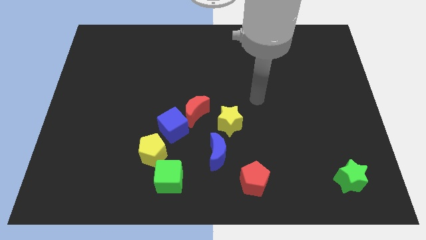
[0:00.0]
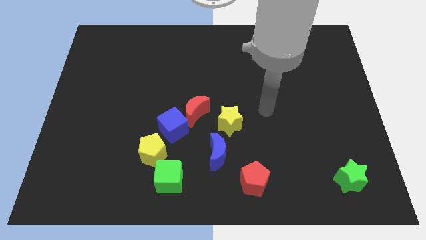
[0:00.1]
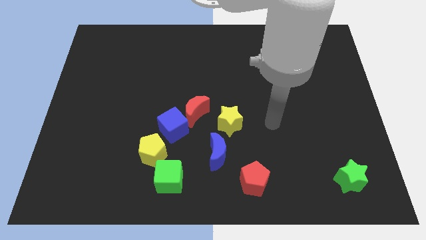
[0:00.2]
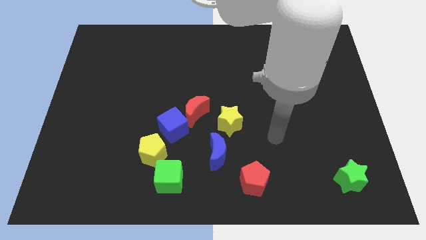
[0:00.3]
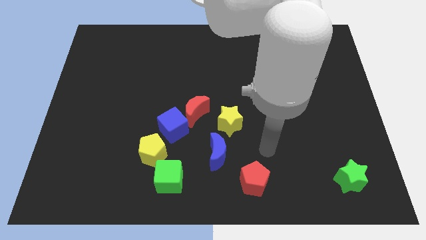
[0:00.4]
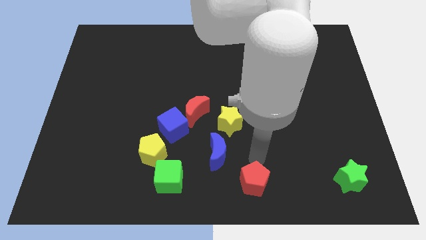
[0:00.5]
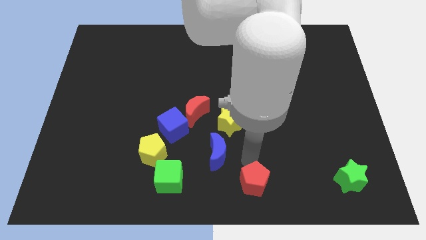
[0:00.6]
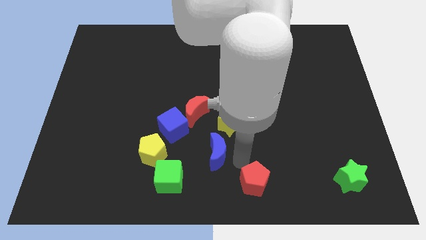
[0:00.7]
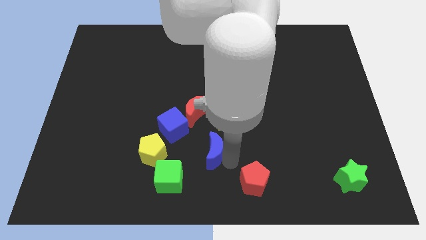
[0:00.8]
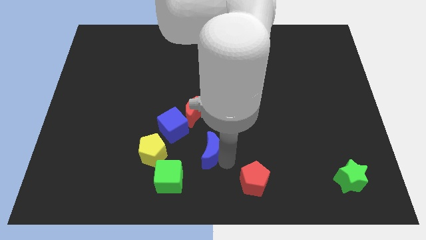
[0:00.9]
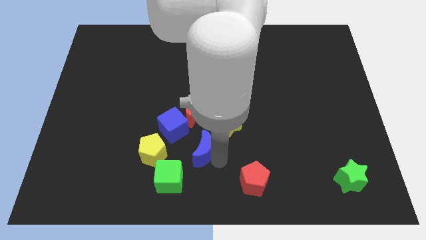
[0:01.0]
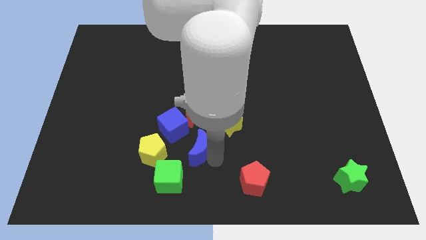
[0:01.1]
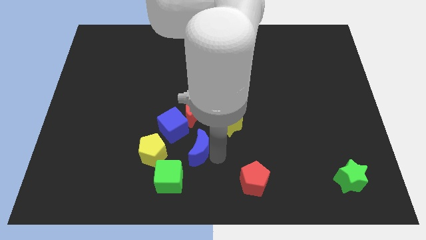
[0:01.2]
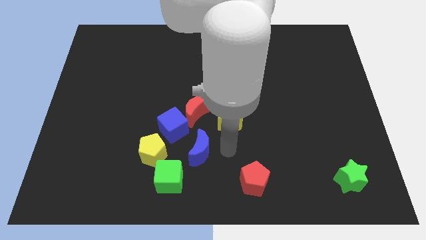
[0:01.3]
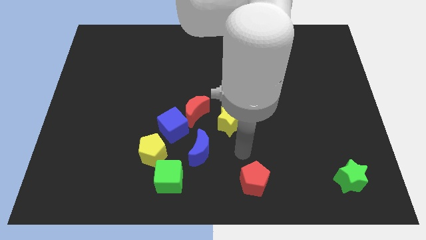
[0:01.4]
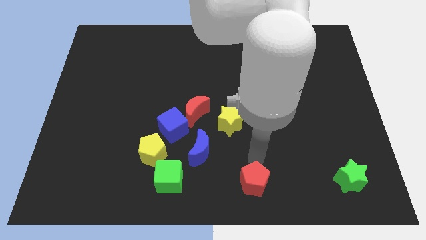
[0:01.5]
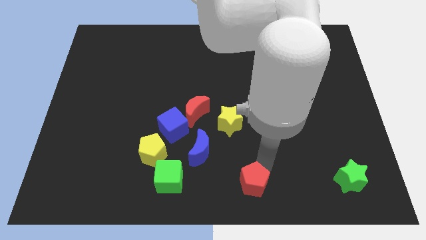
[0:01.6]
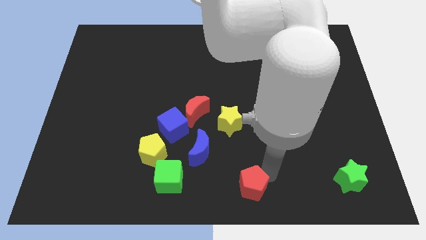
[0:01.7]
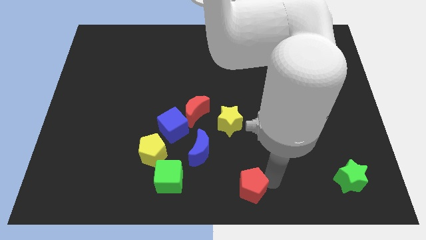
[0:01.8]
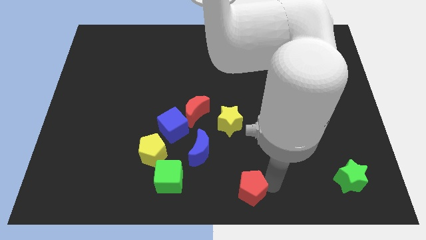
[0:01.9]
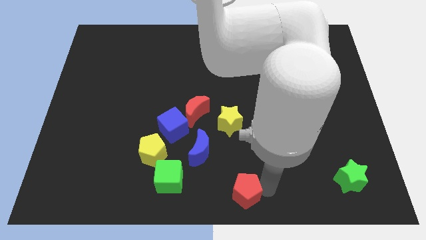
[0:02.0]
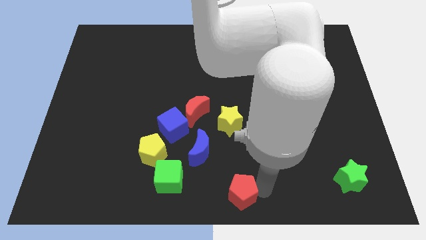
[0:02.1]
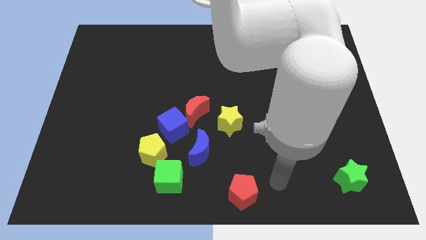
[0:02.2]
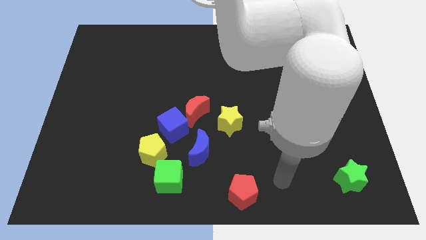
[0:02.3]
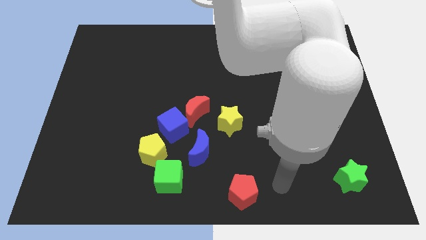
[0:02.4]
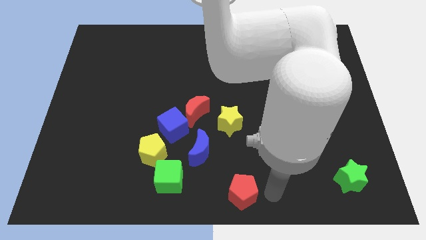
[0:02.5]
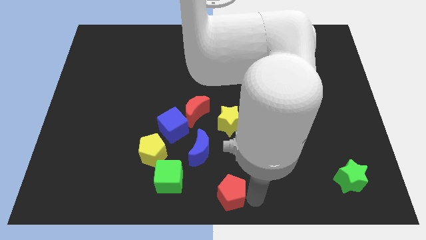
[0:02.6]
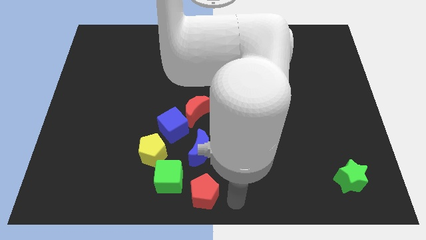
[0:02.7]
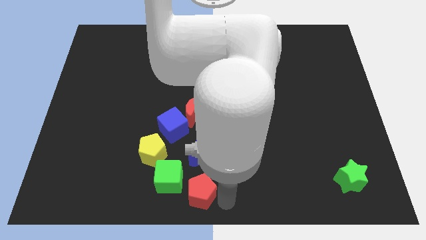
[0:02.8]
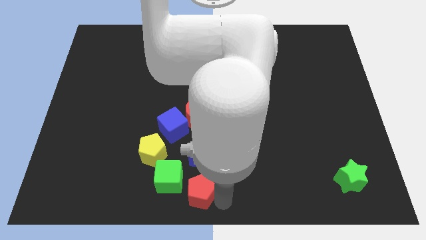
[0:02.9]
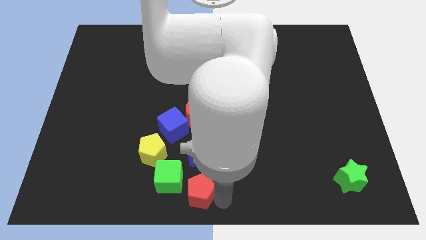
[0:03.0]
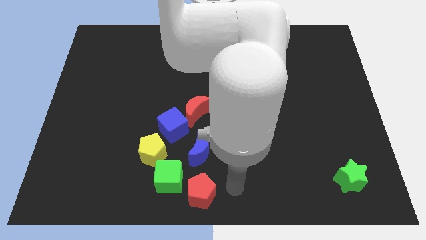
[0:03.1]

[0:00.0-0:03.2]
place the red pentagon next to the green cube

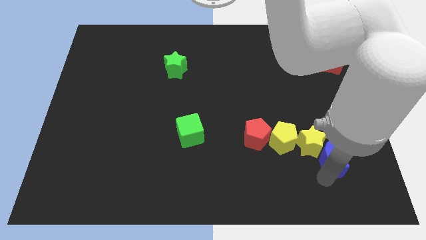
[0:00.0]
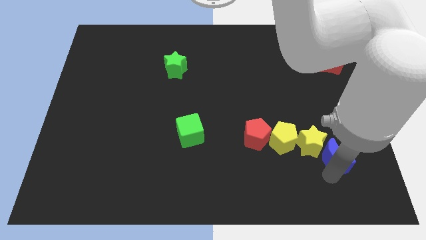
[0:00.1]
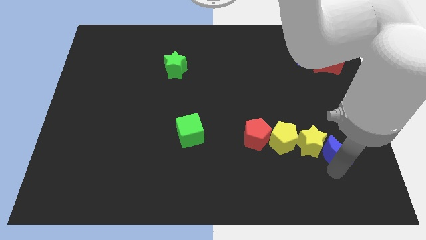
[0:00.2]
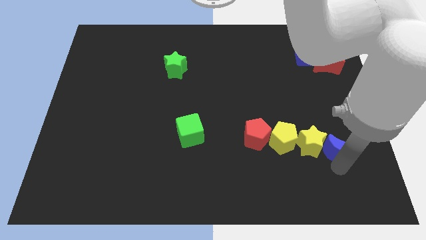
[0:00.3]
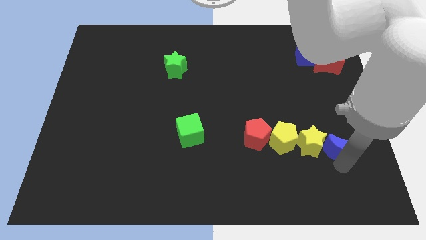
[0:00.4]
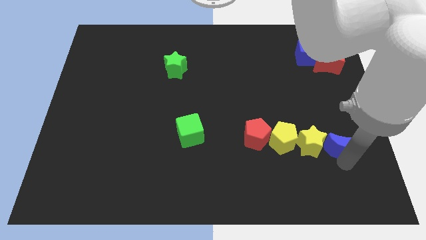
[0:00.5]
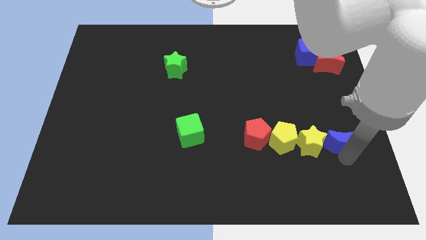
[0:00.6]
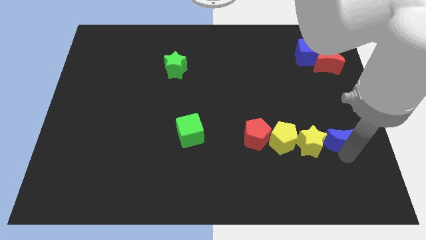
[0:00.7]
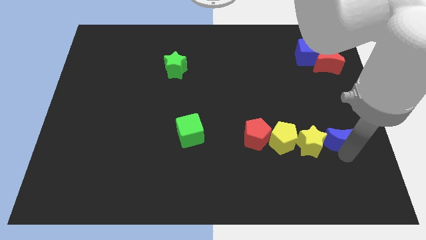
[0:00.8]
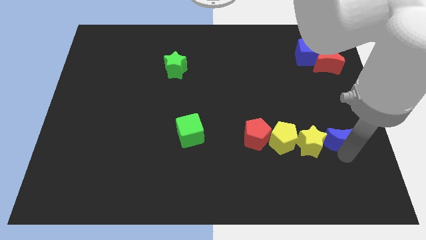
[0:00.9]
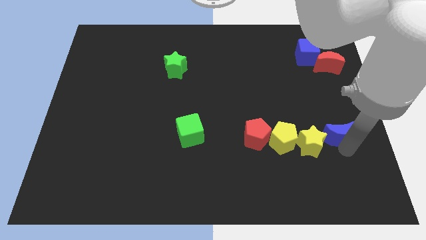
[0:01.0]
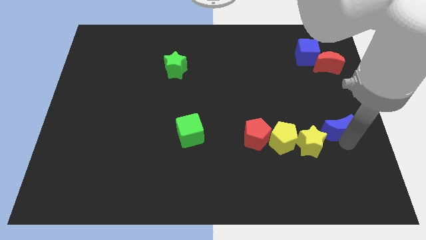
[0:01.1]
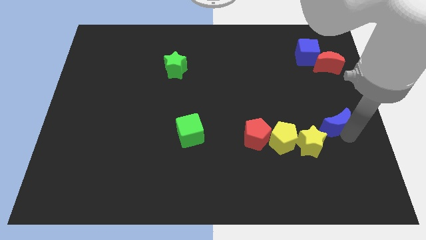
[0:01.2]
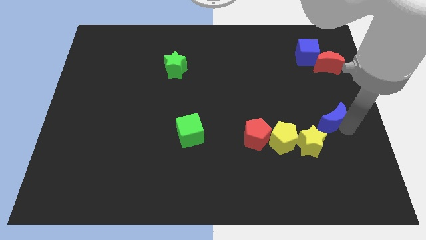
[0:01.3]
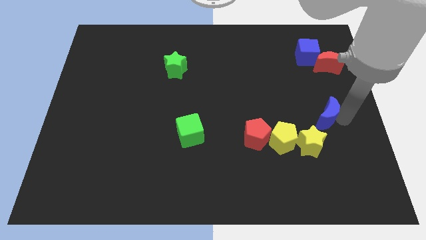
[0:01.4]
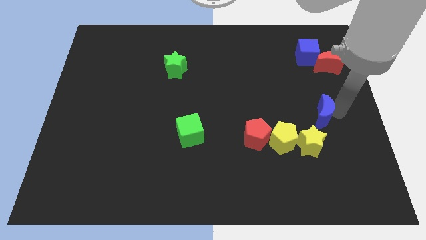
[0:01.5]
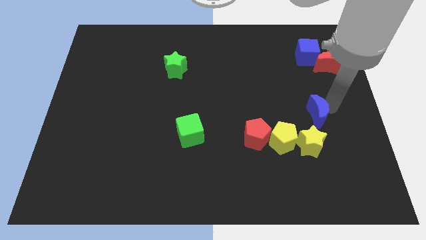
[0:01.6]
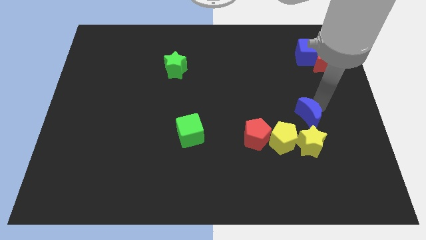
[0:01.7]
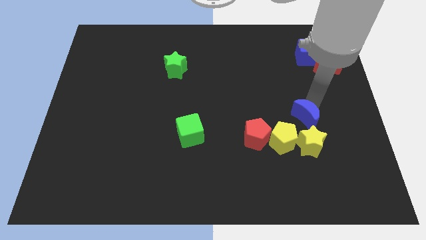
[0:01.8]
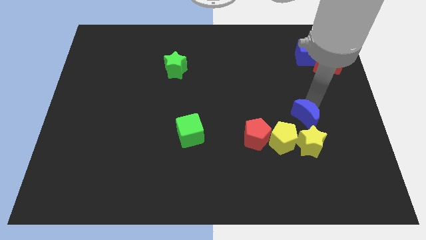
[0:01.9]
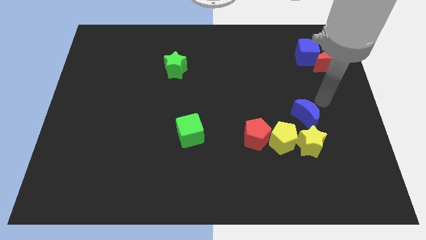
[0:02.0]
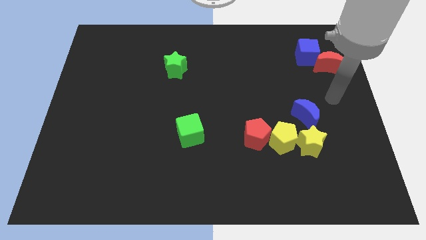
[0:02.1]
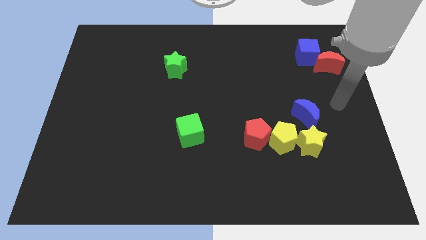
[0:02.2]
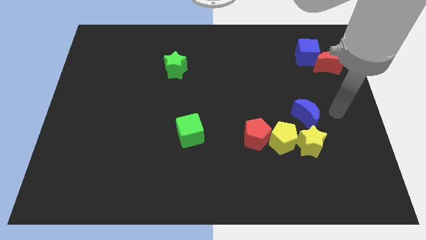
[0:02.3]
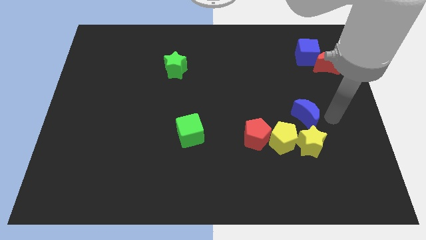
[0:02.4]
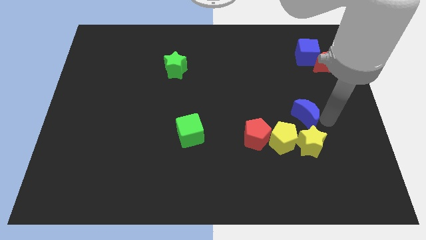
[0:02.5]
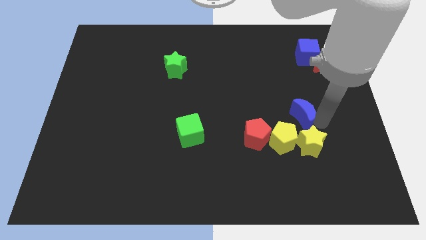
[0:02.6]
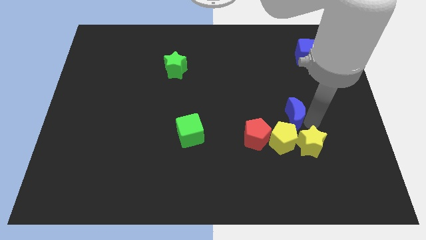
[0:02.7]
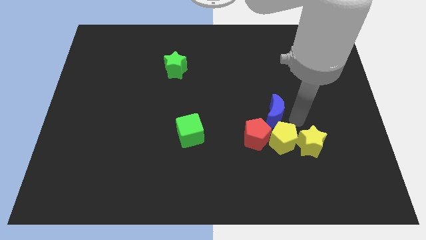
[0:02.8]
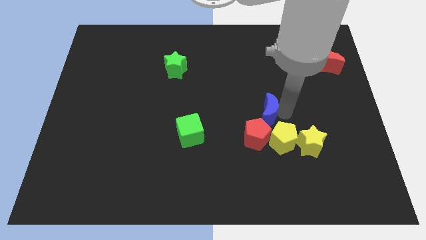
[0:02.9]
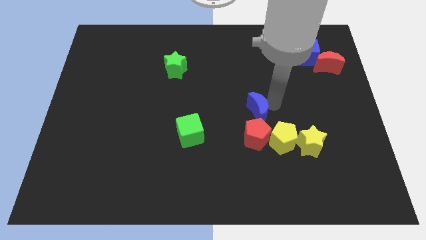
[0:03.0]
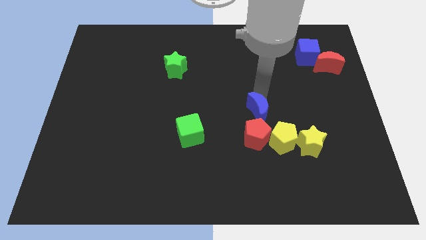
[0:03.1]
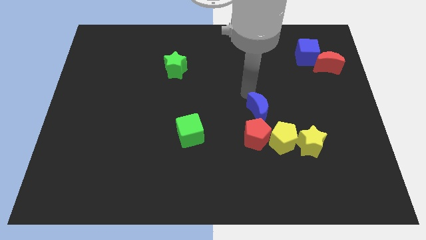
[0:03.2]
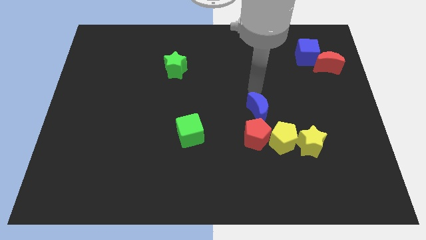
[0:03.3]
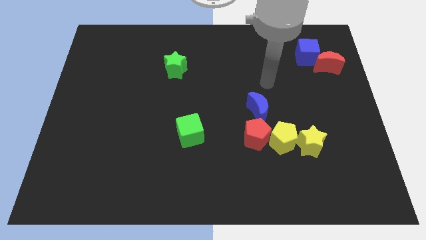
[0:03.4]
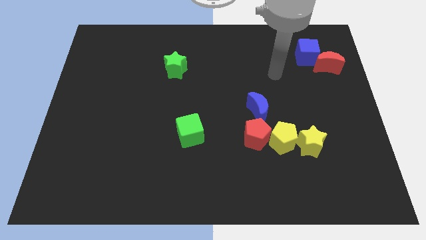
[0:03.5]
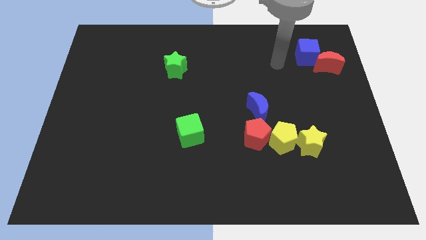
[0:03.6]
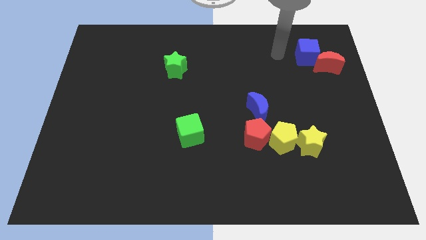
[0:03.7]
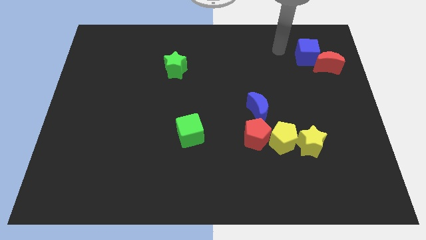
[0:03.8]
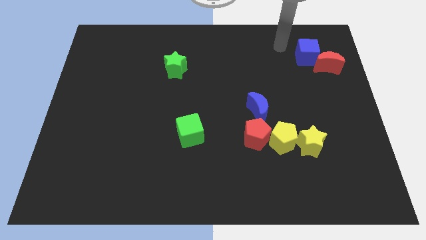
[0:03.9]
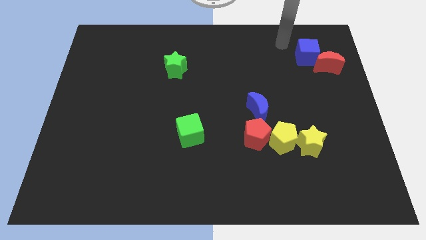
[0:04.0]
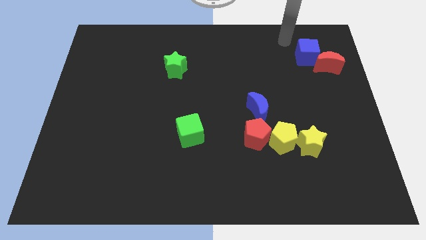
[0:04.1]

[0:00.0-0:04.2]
move the blue crescent above to the red pentagon

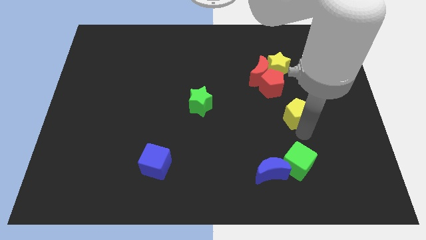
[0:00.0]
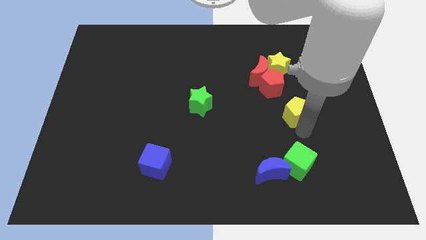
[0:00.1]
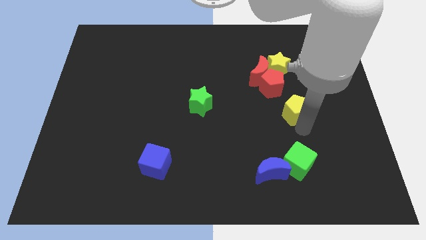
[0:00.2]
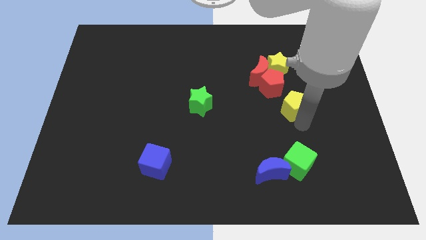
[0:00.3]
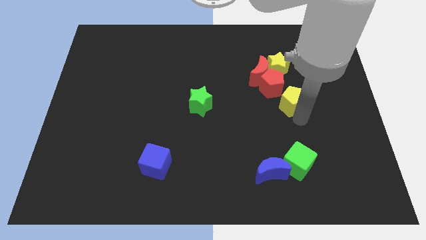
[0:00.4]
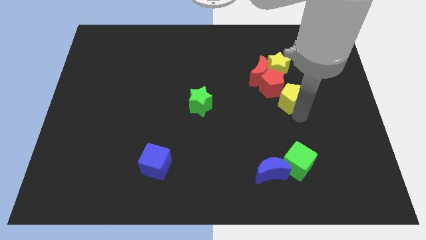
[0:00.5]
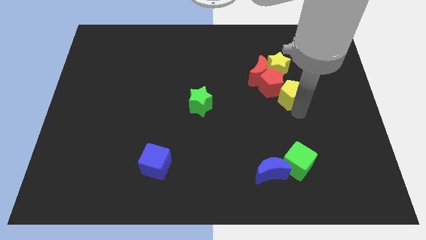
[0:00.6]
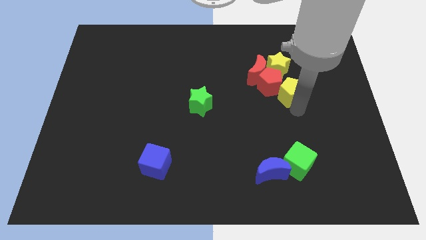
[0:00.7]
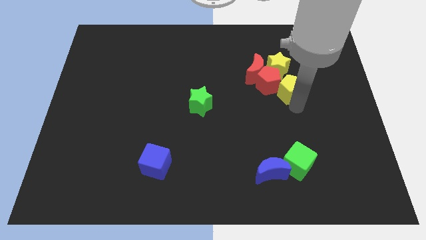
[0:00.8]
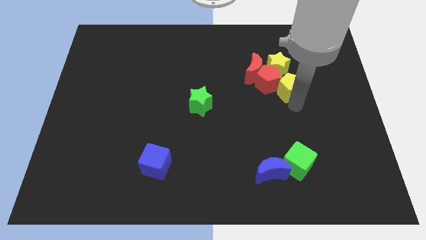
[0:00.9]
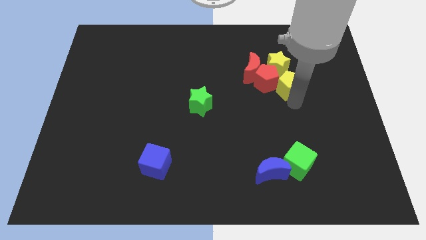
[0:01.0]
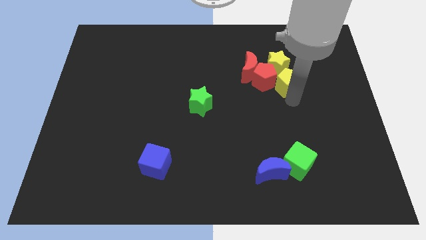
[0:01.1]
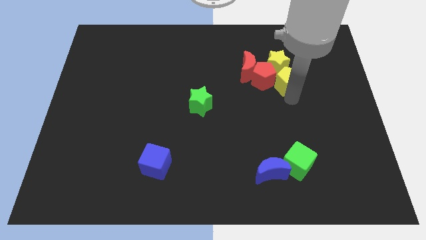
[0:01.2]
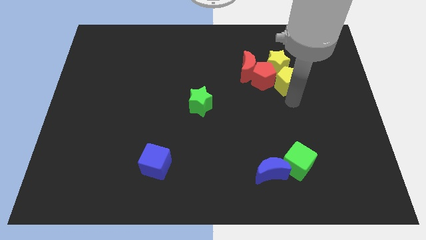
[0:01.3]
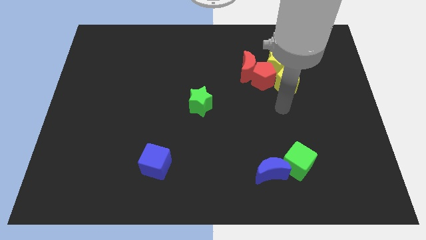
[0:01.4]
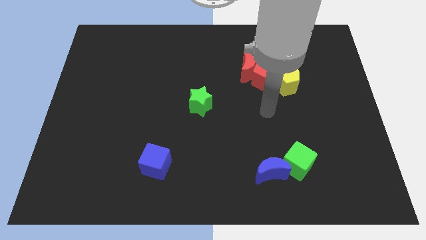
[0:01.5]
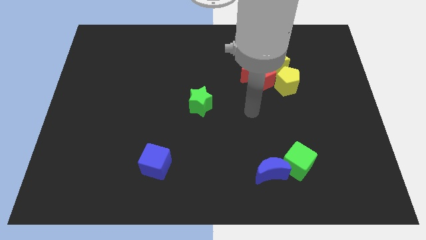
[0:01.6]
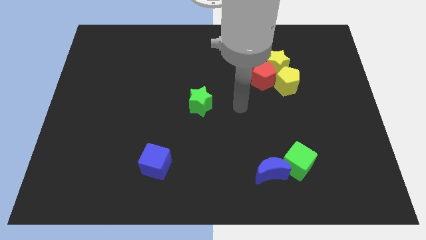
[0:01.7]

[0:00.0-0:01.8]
move the yellow pentagon to the right of the red pentagon
